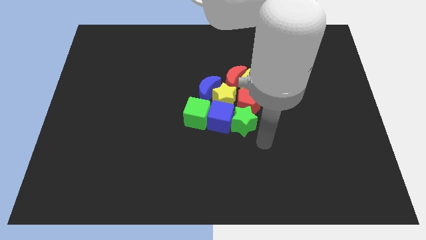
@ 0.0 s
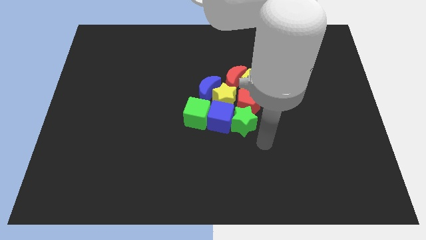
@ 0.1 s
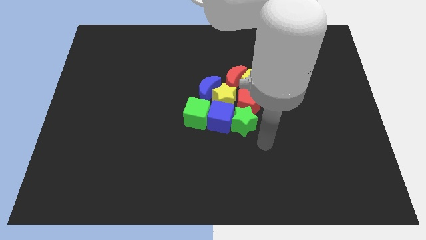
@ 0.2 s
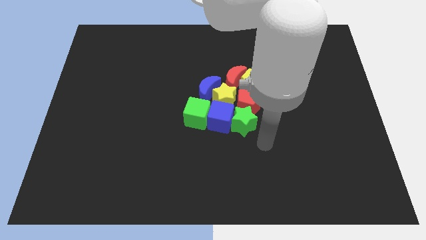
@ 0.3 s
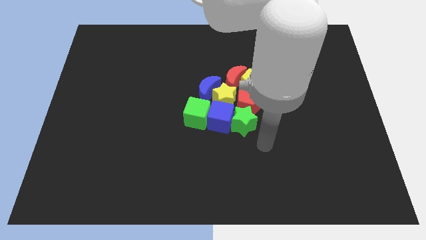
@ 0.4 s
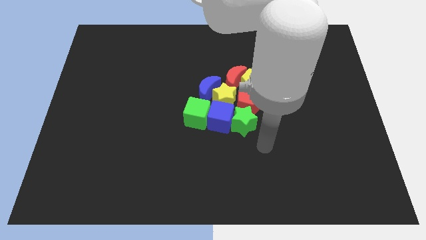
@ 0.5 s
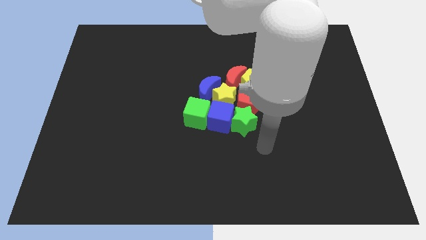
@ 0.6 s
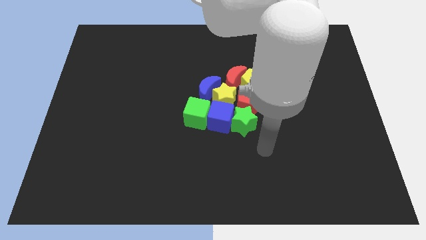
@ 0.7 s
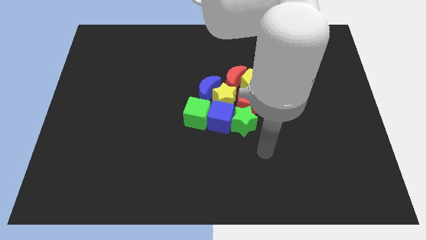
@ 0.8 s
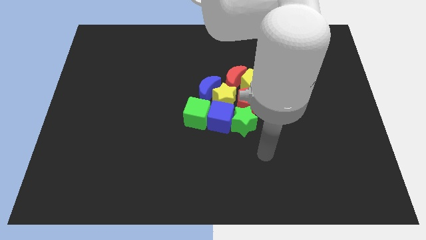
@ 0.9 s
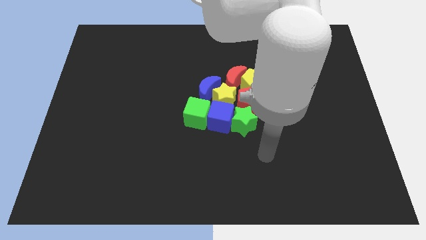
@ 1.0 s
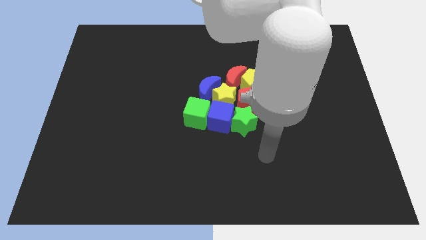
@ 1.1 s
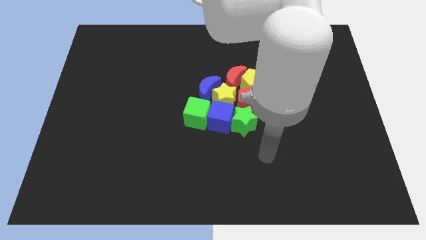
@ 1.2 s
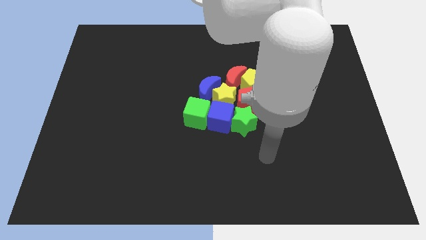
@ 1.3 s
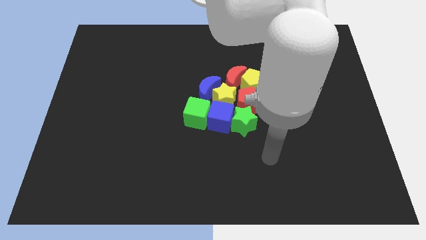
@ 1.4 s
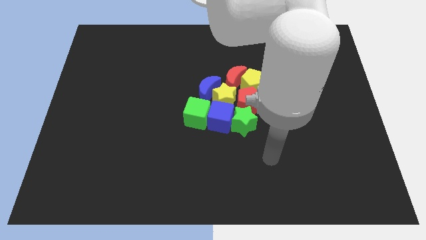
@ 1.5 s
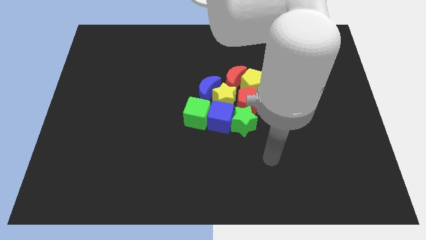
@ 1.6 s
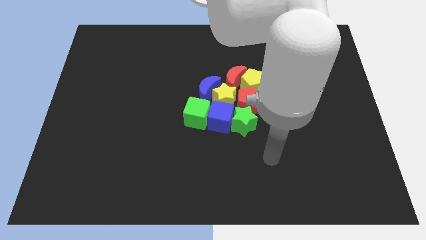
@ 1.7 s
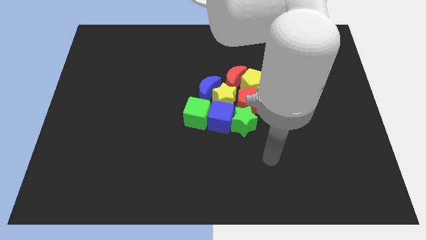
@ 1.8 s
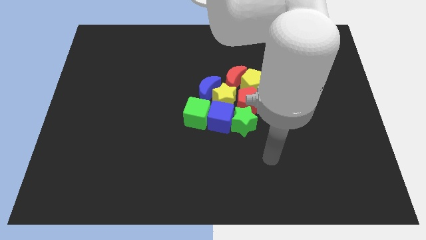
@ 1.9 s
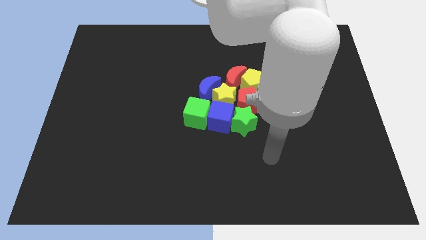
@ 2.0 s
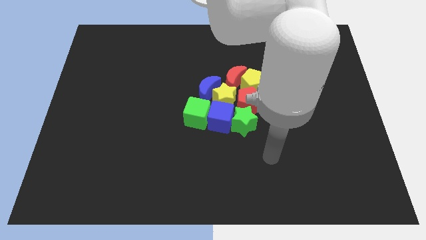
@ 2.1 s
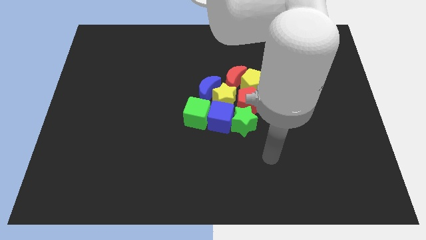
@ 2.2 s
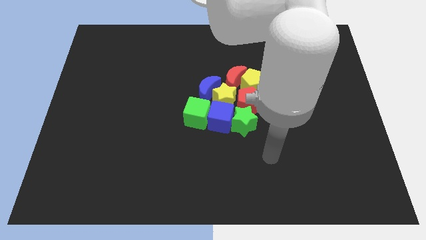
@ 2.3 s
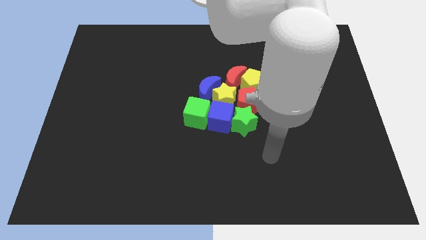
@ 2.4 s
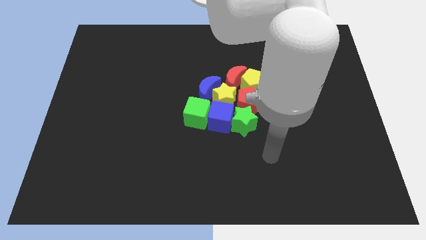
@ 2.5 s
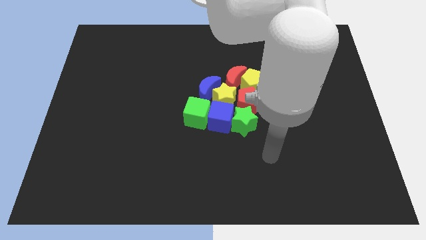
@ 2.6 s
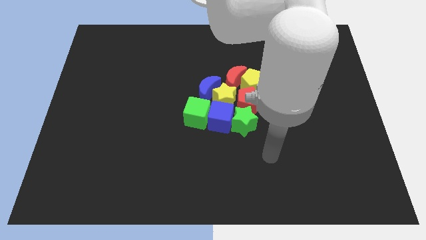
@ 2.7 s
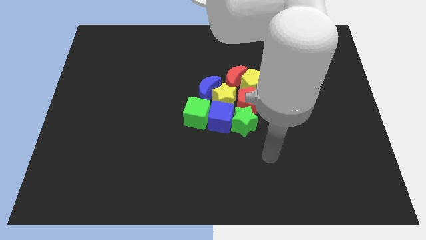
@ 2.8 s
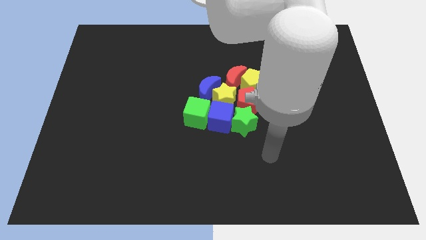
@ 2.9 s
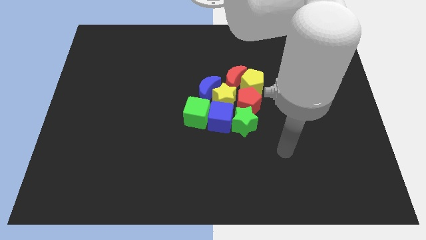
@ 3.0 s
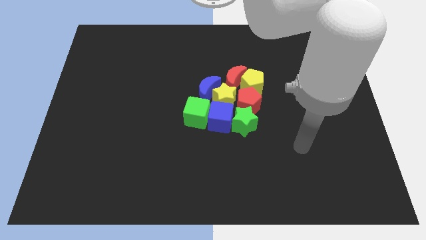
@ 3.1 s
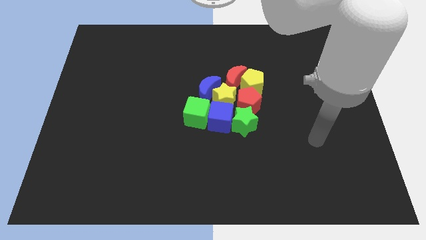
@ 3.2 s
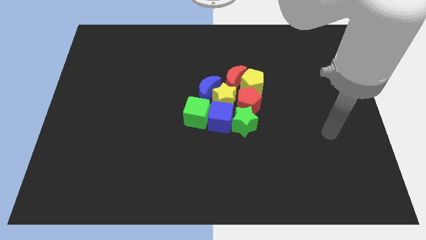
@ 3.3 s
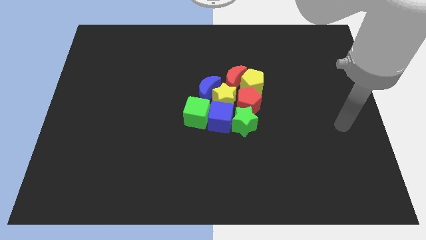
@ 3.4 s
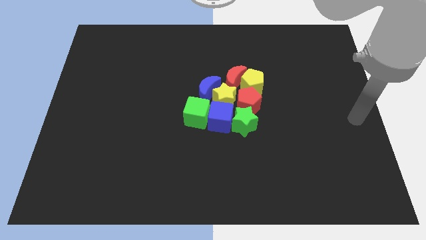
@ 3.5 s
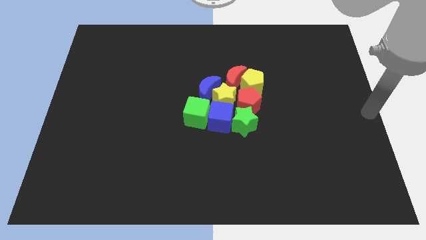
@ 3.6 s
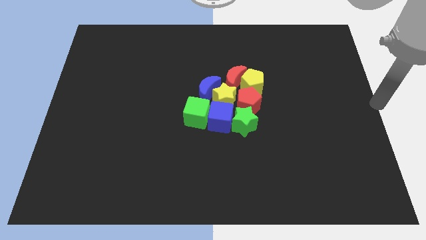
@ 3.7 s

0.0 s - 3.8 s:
move your hand to the right center of the board

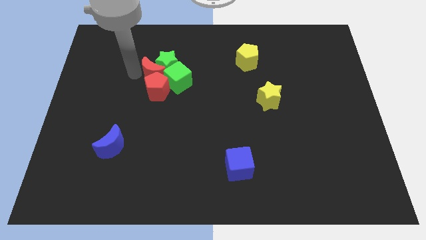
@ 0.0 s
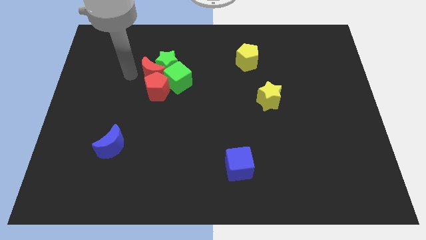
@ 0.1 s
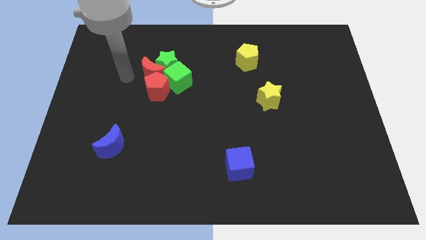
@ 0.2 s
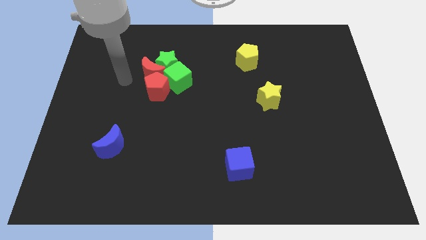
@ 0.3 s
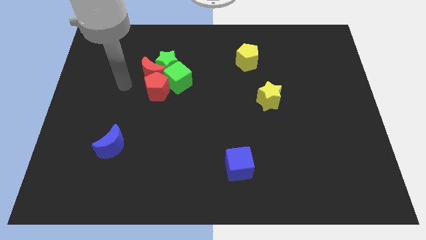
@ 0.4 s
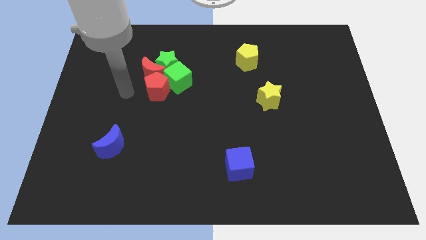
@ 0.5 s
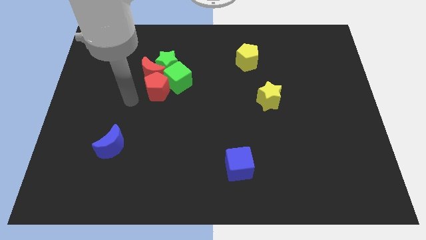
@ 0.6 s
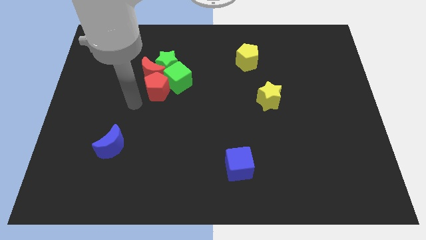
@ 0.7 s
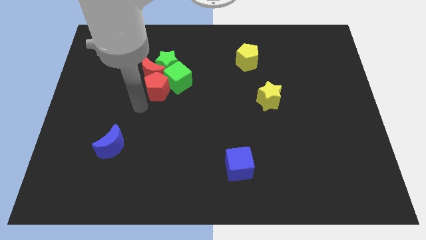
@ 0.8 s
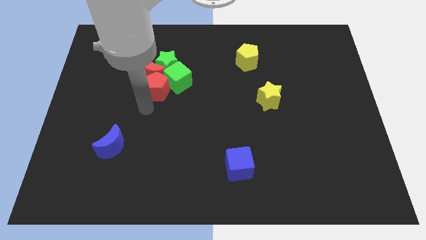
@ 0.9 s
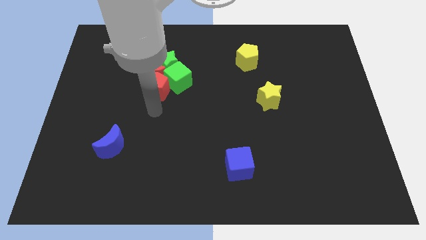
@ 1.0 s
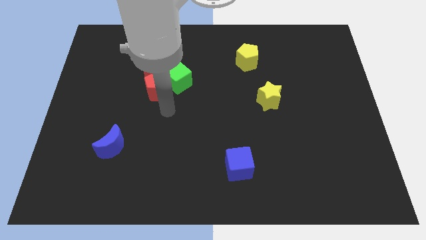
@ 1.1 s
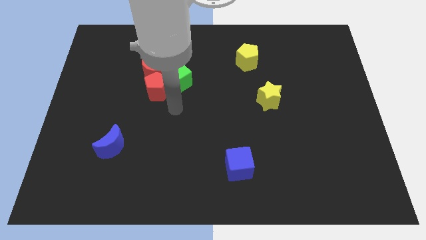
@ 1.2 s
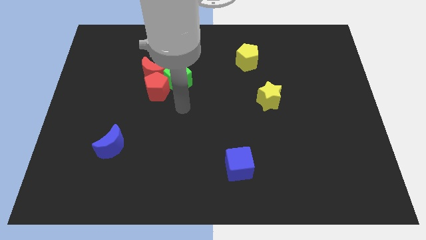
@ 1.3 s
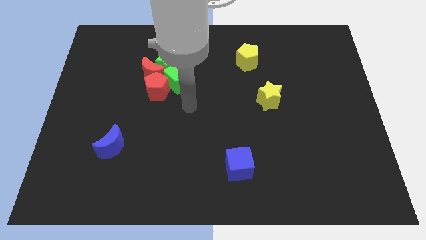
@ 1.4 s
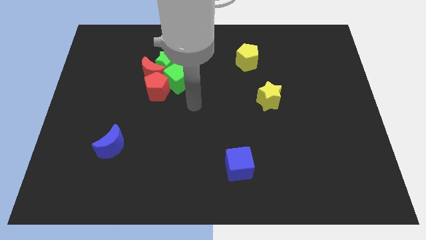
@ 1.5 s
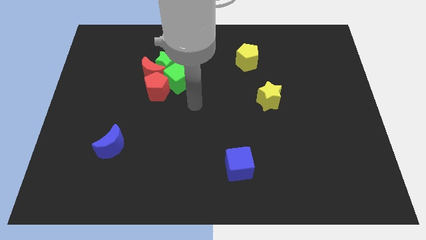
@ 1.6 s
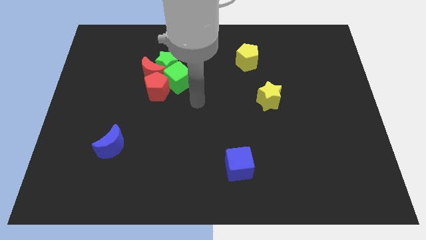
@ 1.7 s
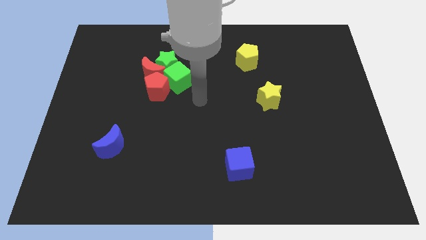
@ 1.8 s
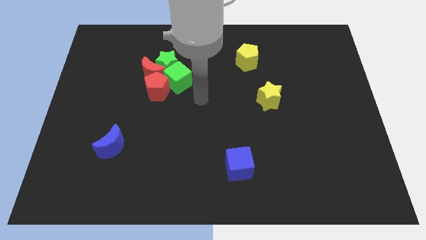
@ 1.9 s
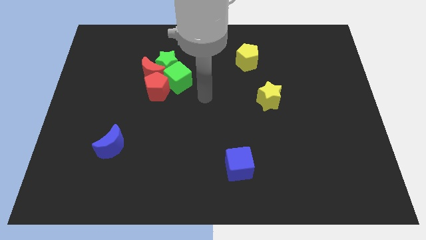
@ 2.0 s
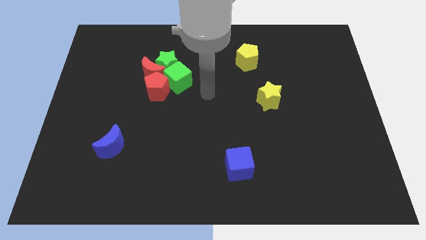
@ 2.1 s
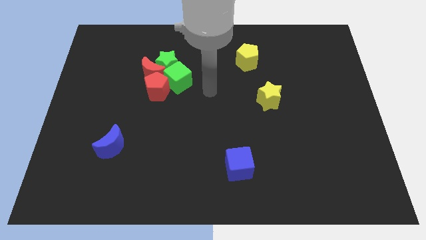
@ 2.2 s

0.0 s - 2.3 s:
move your arm away from the red moon

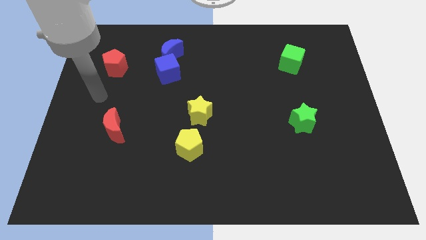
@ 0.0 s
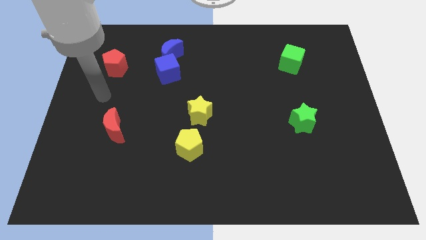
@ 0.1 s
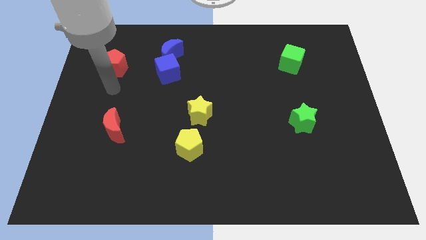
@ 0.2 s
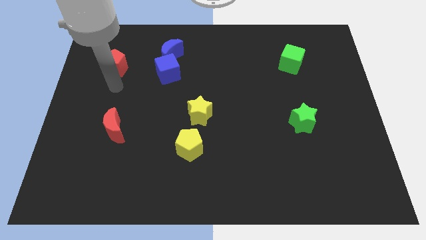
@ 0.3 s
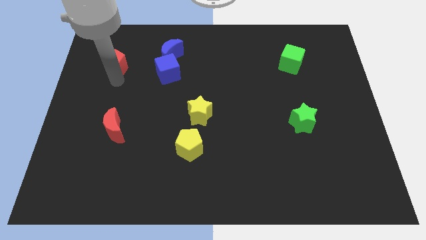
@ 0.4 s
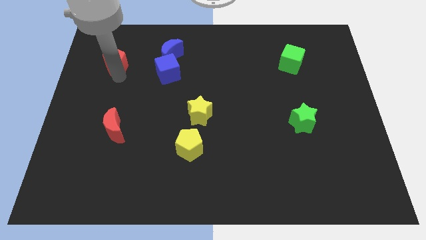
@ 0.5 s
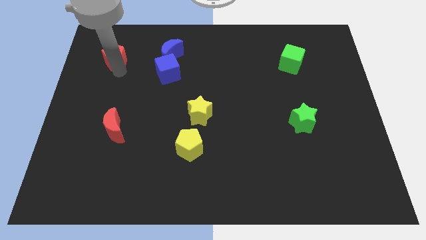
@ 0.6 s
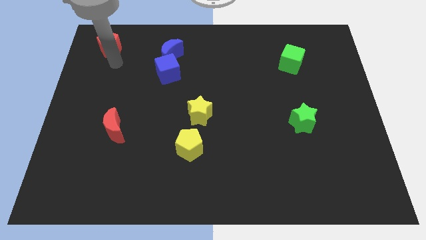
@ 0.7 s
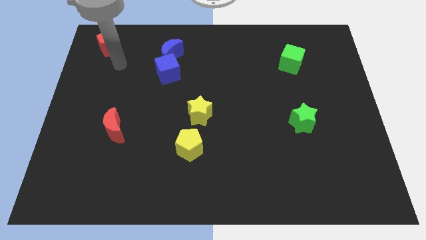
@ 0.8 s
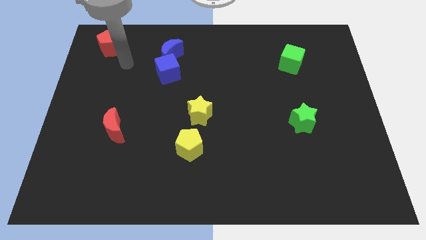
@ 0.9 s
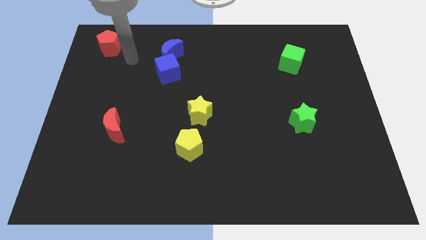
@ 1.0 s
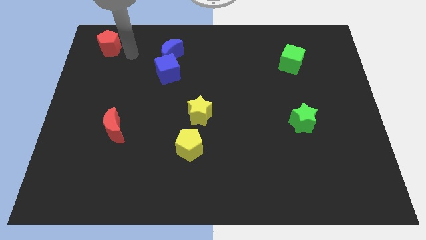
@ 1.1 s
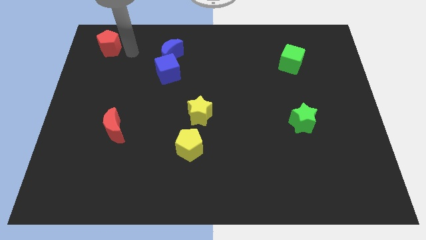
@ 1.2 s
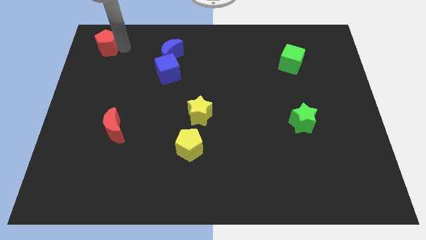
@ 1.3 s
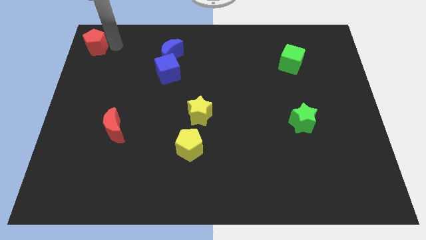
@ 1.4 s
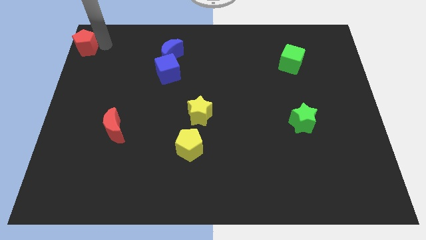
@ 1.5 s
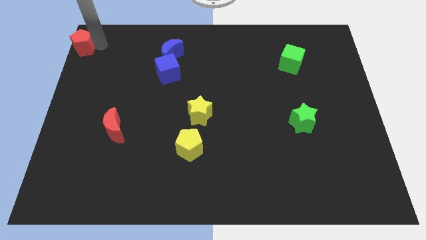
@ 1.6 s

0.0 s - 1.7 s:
place the red pentagon to the top left of the board

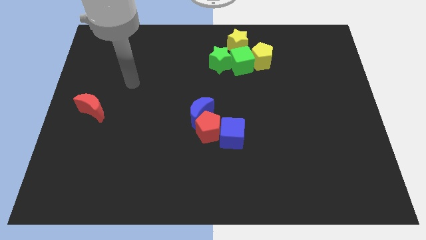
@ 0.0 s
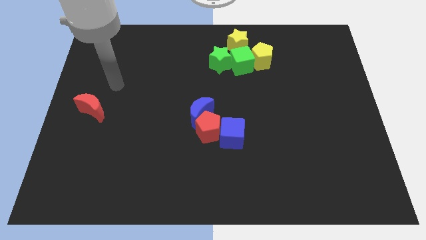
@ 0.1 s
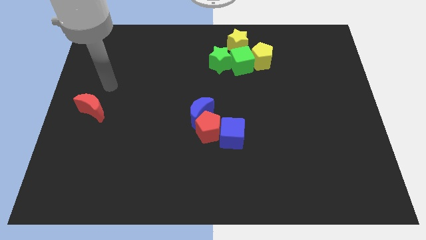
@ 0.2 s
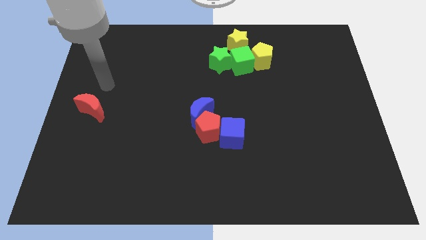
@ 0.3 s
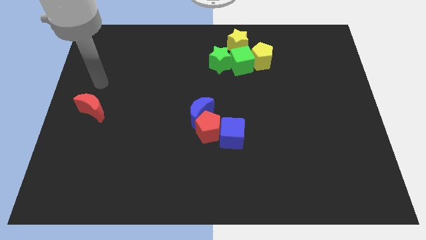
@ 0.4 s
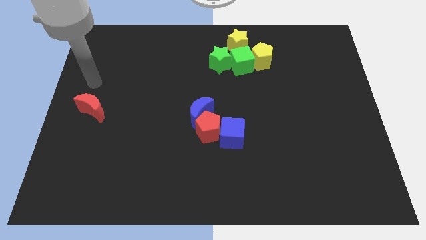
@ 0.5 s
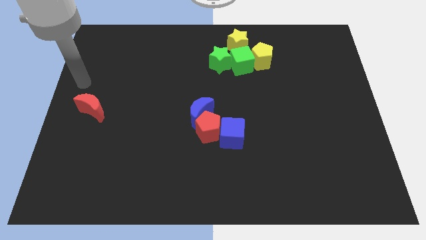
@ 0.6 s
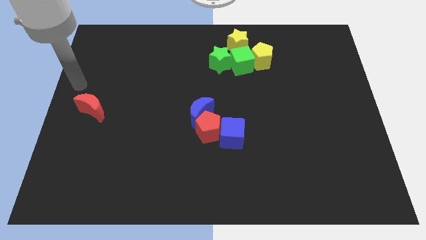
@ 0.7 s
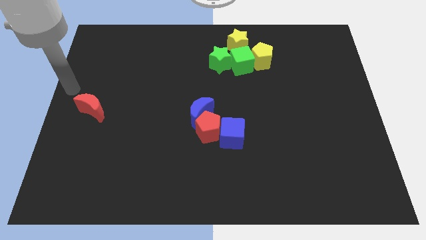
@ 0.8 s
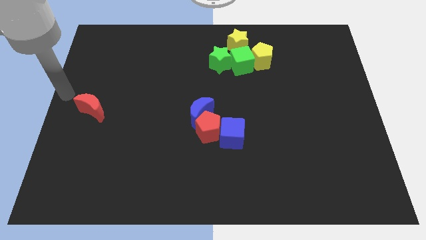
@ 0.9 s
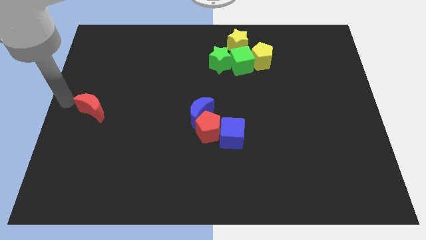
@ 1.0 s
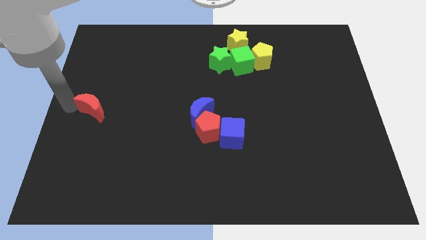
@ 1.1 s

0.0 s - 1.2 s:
push your arm towards the left center side of the board
